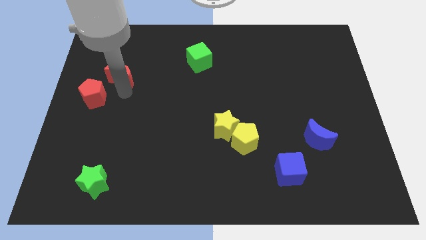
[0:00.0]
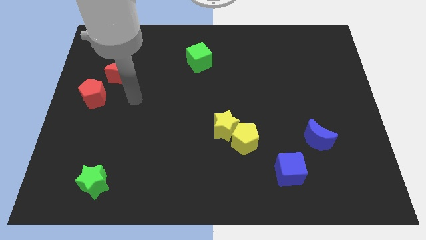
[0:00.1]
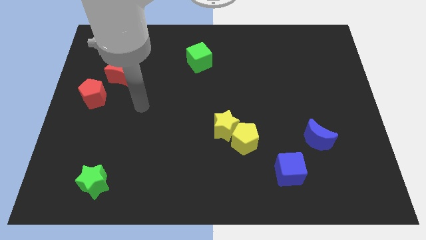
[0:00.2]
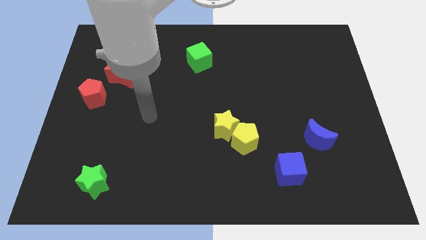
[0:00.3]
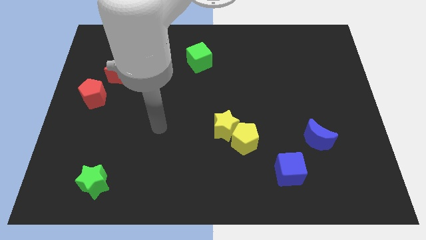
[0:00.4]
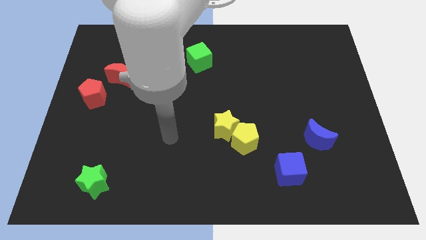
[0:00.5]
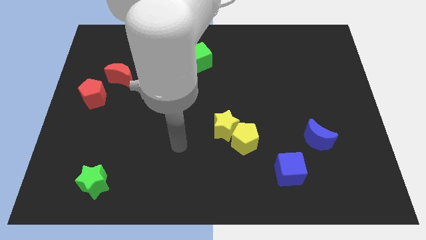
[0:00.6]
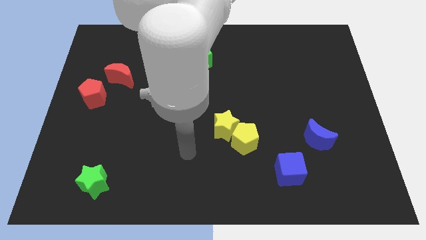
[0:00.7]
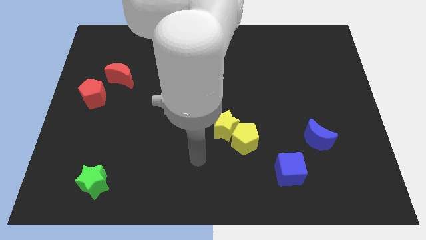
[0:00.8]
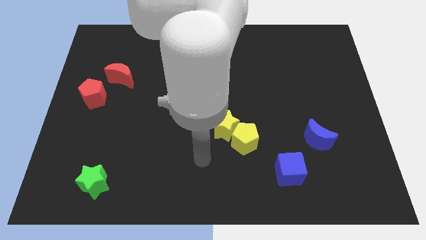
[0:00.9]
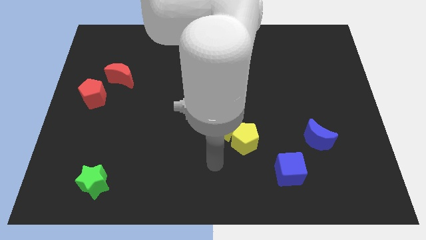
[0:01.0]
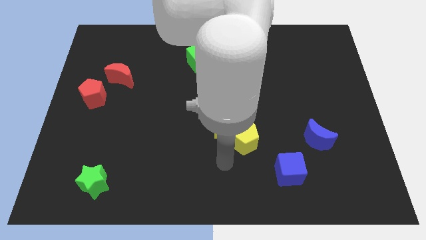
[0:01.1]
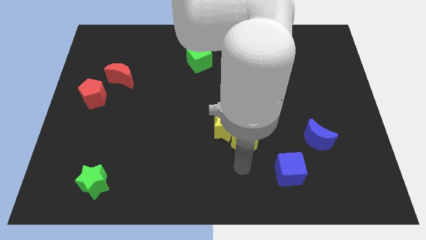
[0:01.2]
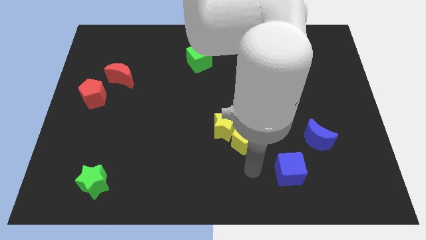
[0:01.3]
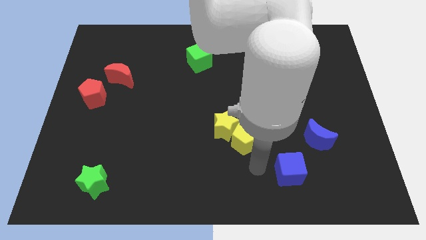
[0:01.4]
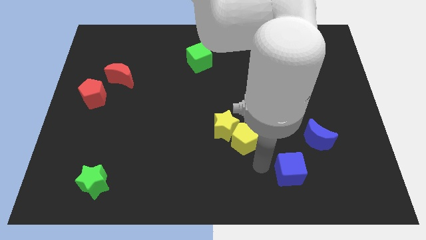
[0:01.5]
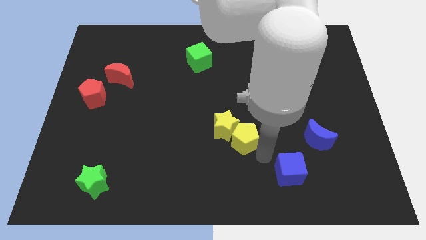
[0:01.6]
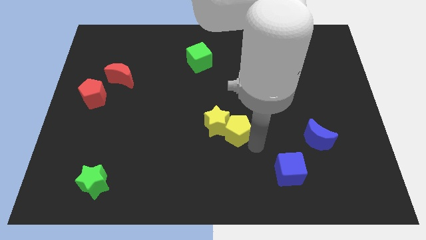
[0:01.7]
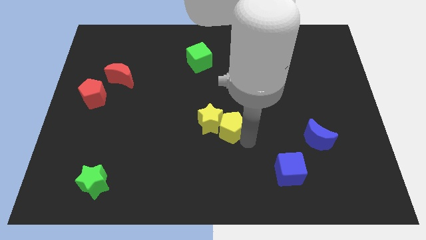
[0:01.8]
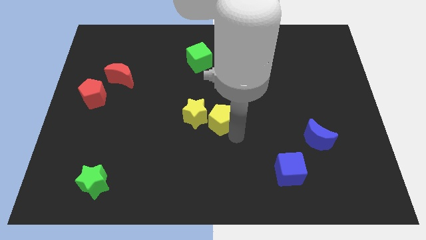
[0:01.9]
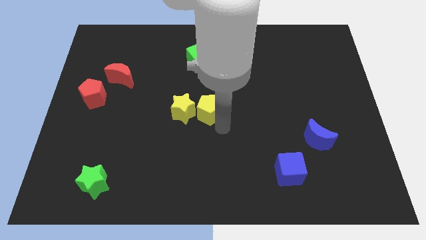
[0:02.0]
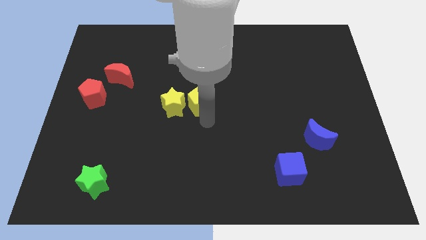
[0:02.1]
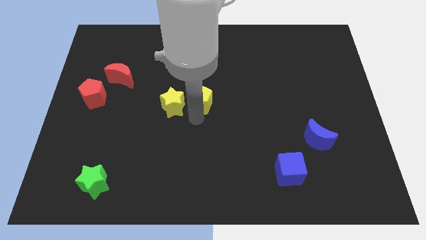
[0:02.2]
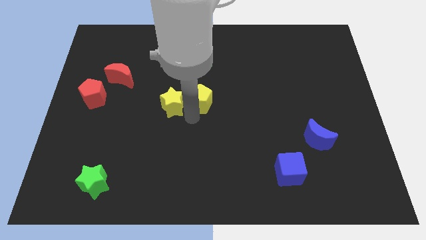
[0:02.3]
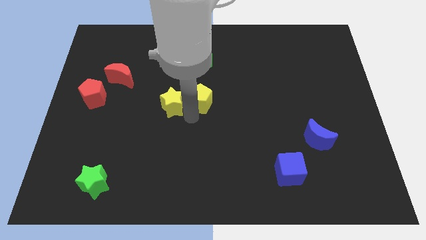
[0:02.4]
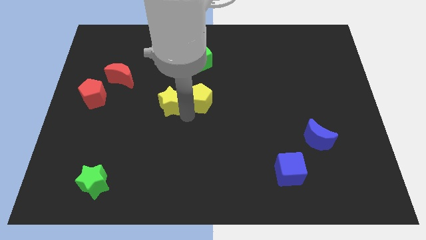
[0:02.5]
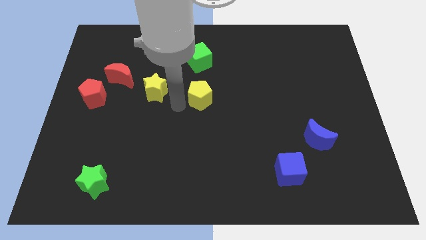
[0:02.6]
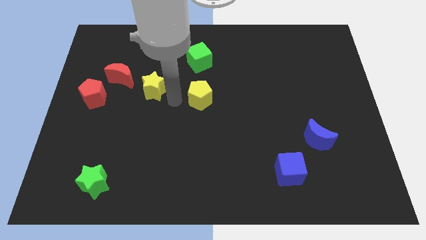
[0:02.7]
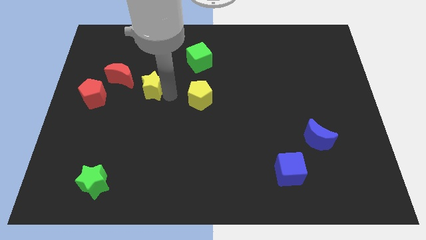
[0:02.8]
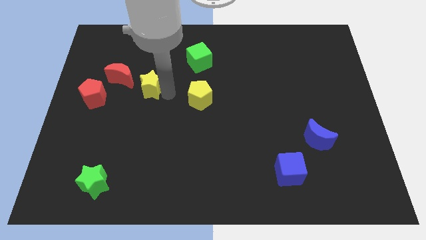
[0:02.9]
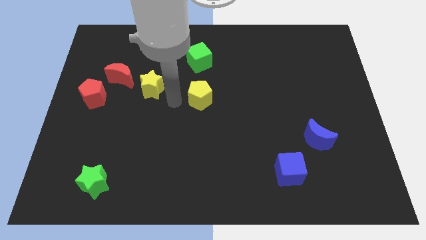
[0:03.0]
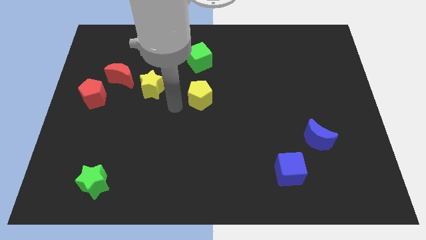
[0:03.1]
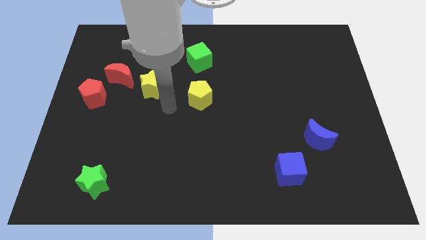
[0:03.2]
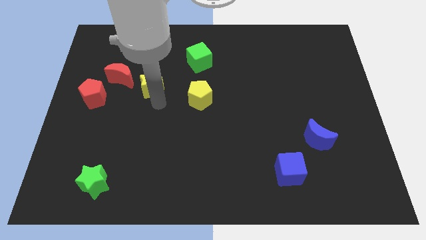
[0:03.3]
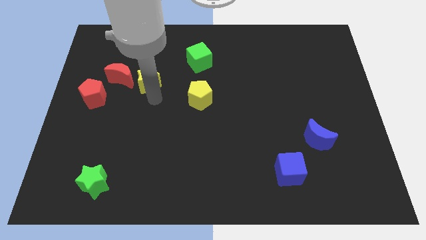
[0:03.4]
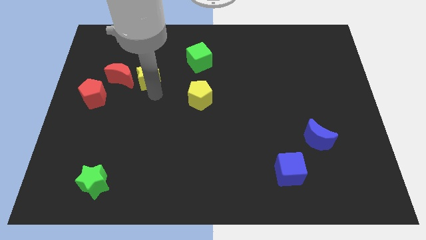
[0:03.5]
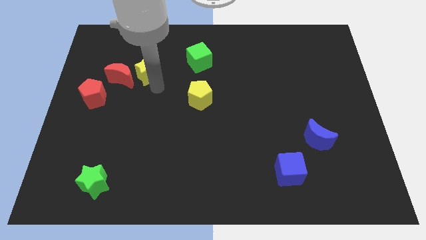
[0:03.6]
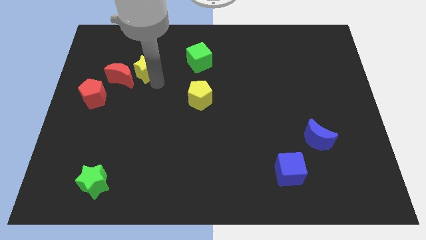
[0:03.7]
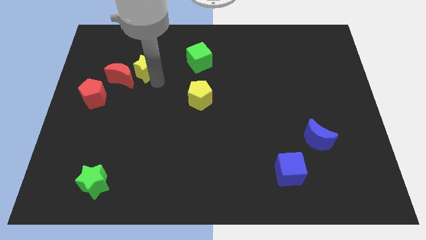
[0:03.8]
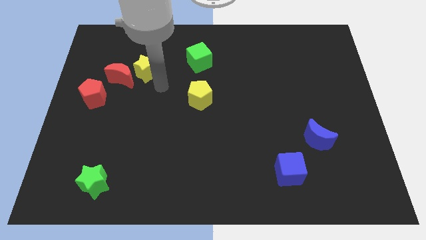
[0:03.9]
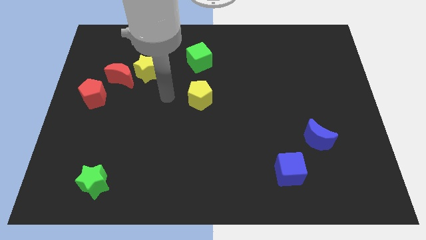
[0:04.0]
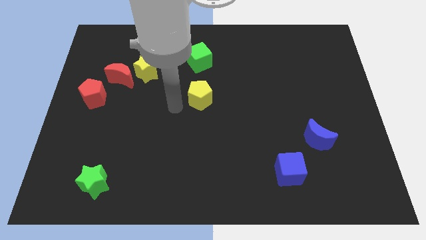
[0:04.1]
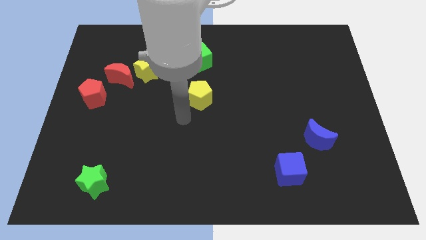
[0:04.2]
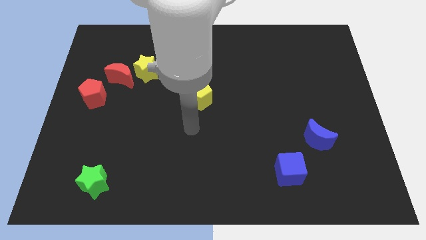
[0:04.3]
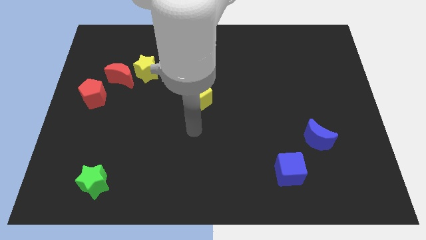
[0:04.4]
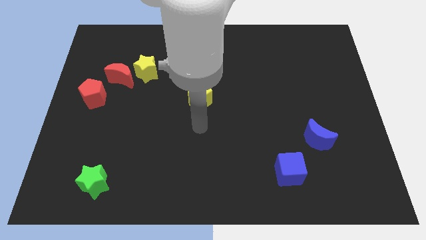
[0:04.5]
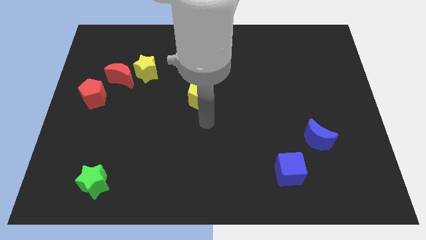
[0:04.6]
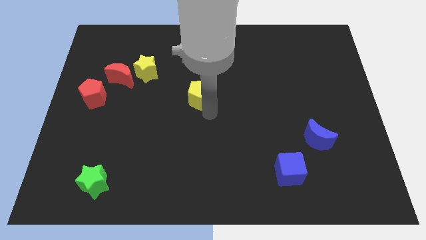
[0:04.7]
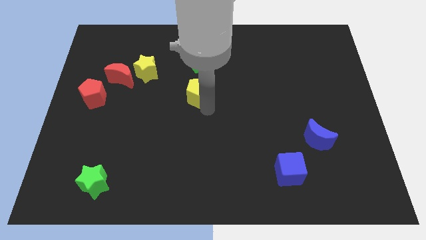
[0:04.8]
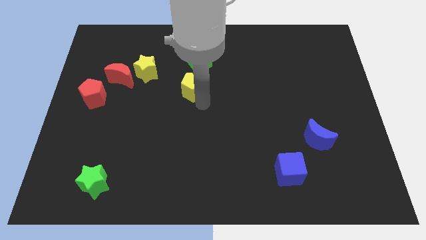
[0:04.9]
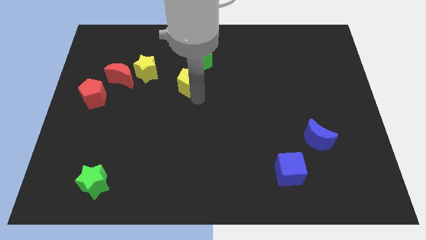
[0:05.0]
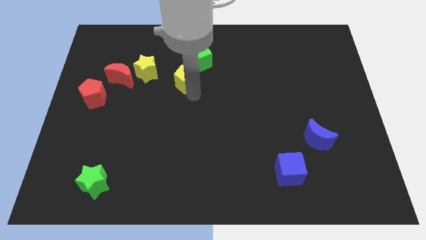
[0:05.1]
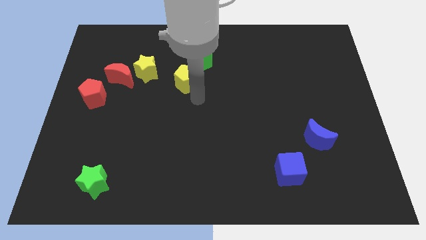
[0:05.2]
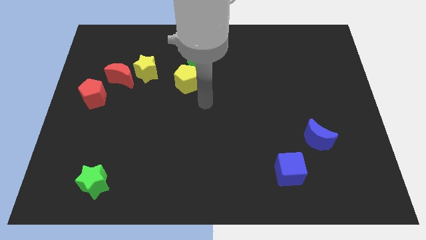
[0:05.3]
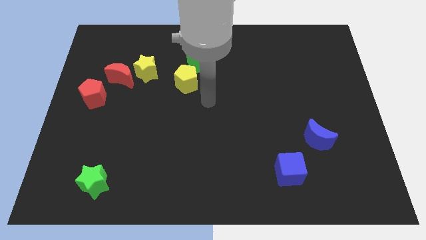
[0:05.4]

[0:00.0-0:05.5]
move the yellow blocks towards the top left side of the board

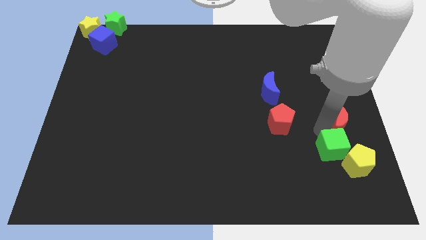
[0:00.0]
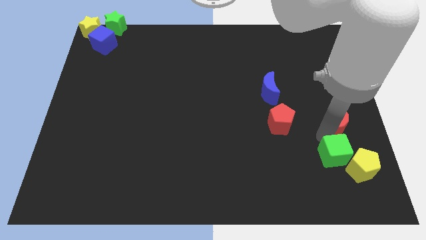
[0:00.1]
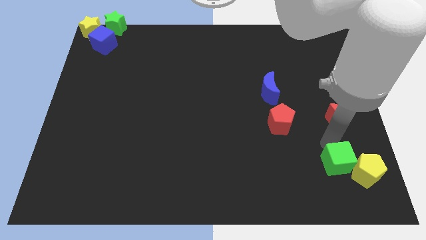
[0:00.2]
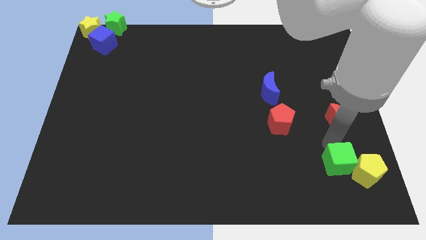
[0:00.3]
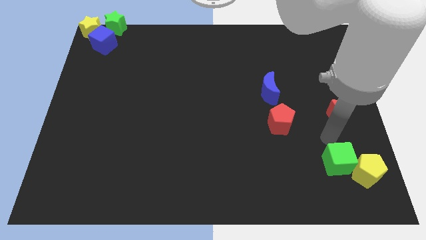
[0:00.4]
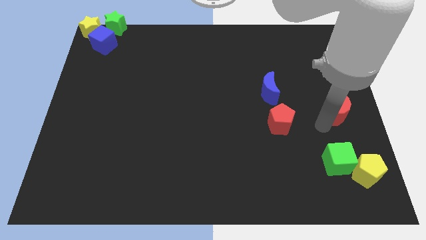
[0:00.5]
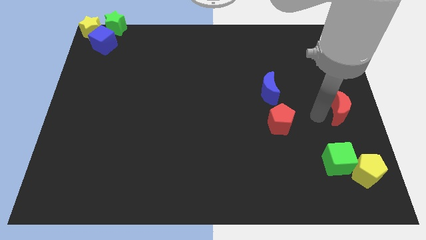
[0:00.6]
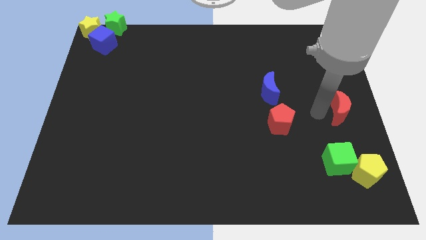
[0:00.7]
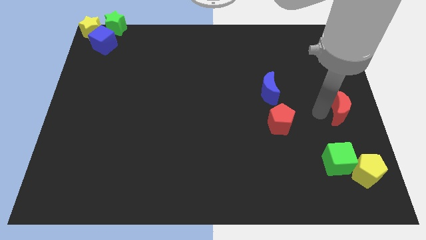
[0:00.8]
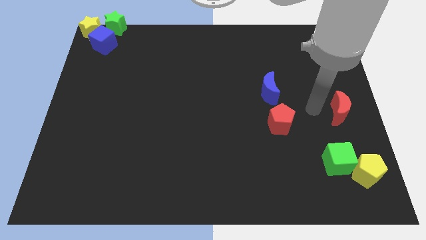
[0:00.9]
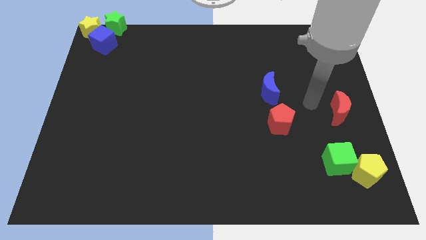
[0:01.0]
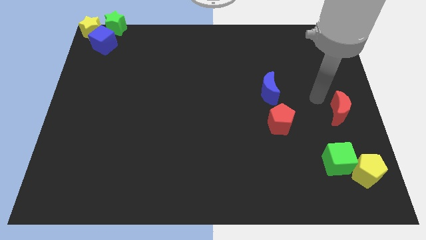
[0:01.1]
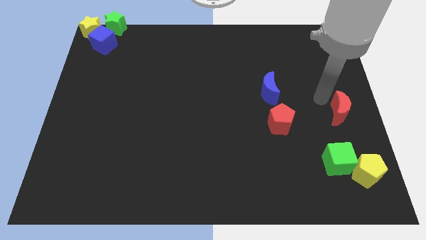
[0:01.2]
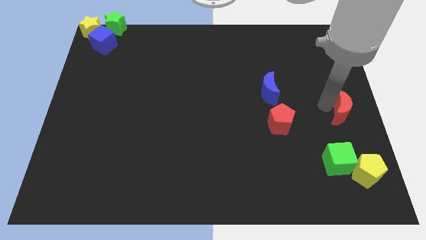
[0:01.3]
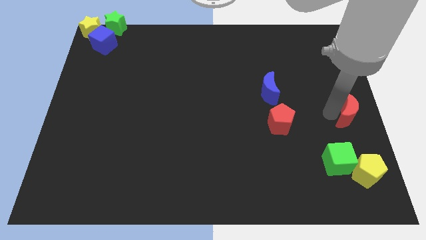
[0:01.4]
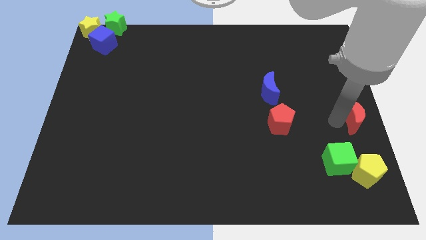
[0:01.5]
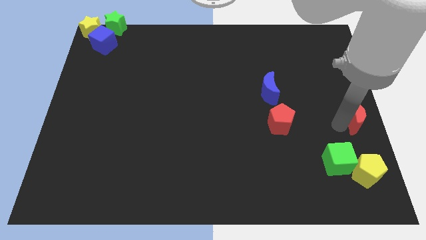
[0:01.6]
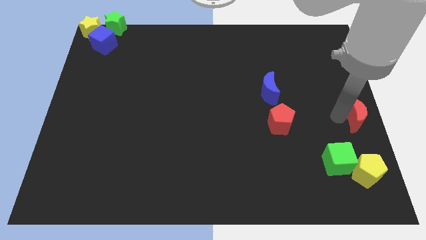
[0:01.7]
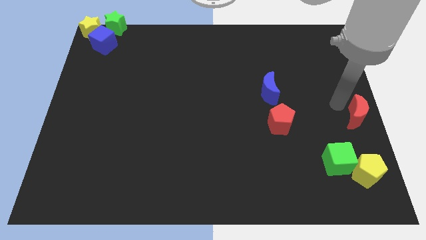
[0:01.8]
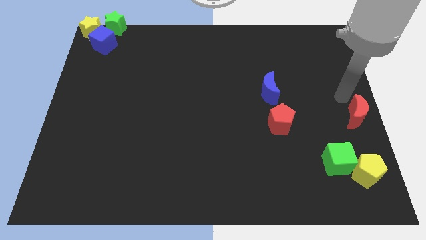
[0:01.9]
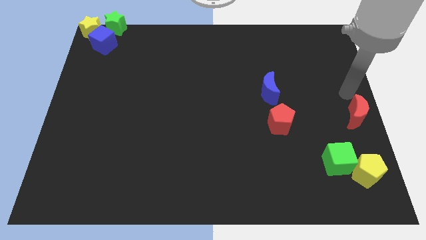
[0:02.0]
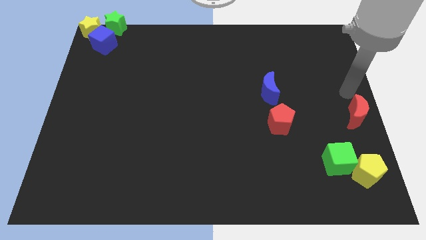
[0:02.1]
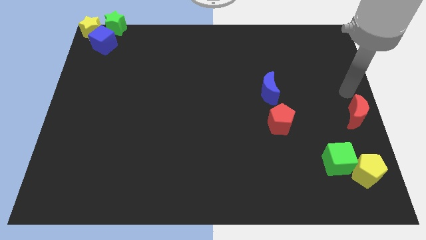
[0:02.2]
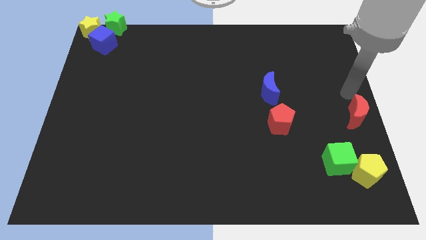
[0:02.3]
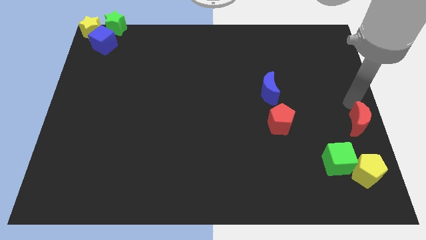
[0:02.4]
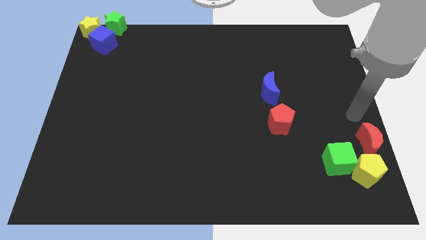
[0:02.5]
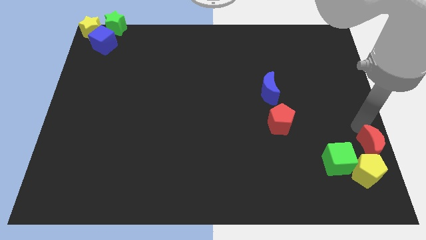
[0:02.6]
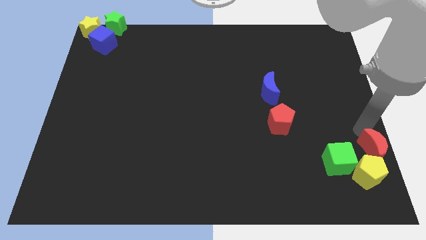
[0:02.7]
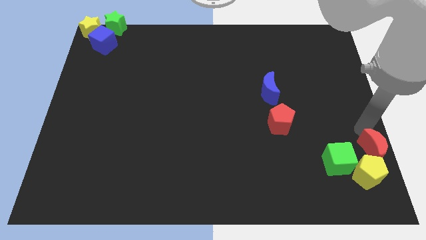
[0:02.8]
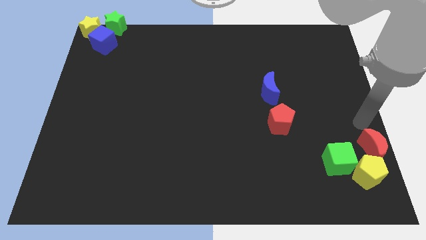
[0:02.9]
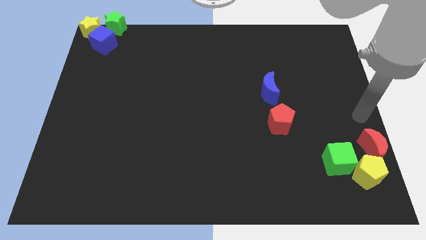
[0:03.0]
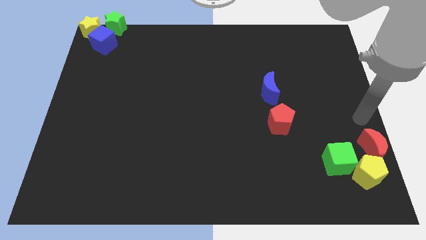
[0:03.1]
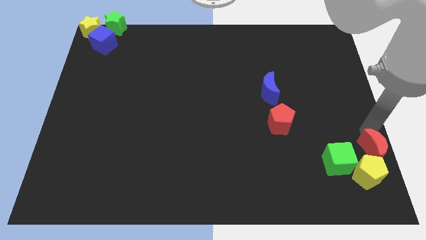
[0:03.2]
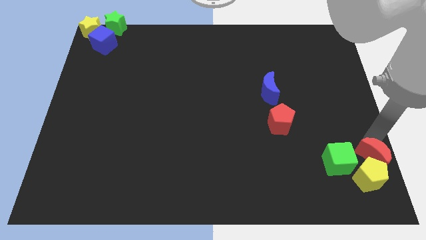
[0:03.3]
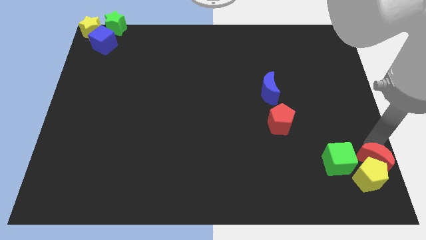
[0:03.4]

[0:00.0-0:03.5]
push the green cube and red moon horizontal to each other
